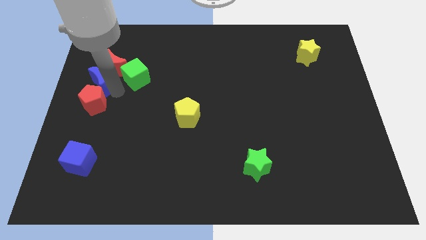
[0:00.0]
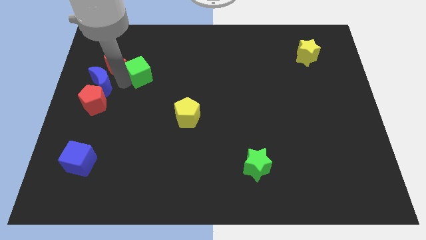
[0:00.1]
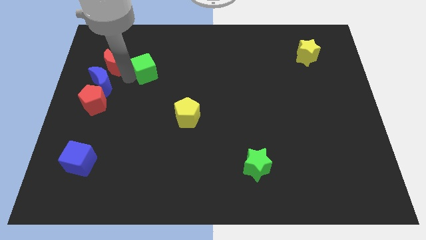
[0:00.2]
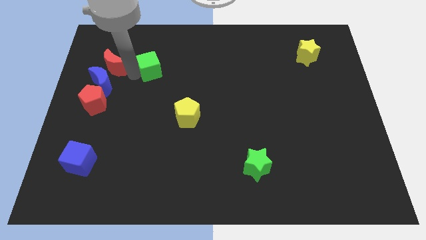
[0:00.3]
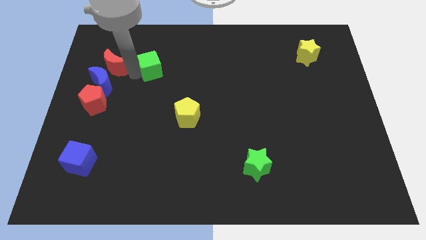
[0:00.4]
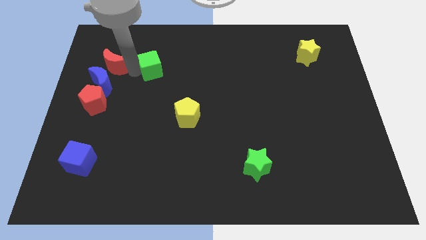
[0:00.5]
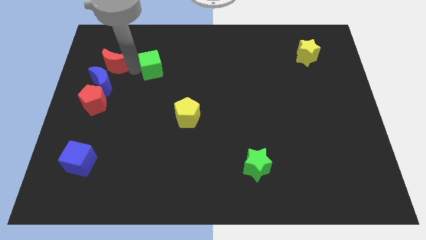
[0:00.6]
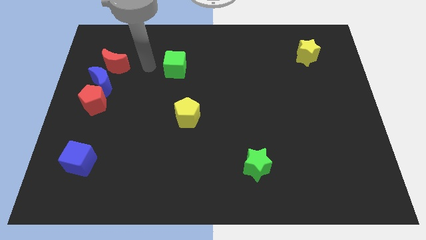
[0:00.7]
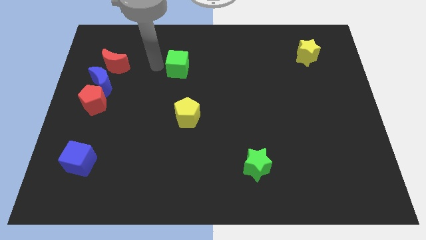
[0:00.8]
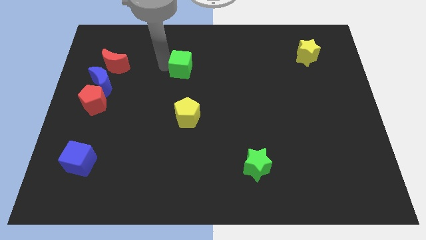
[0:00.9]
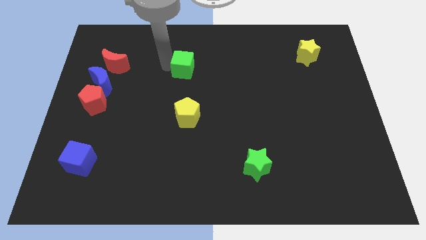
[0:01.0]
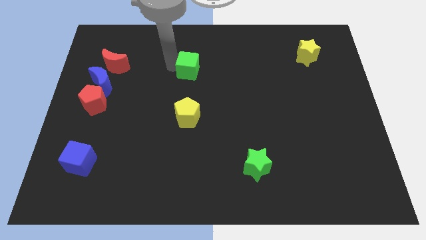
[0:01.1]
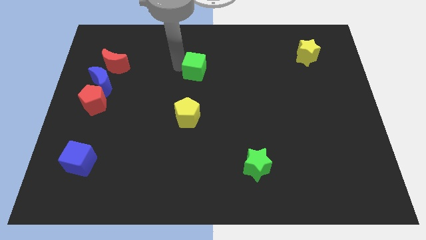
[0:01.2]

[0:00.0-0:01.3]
push the green cube to the top side of the yellow pentagon

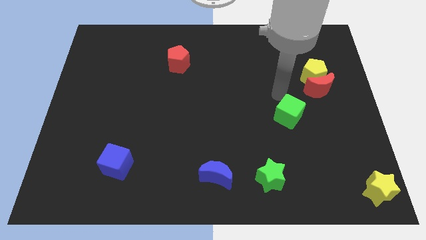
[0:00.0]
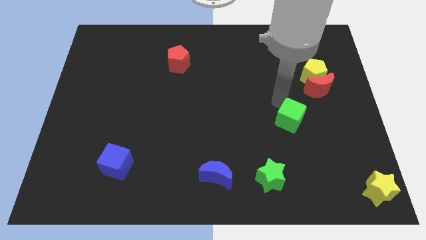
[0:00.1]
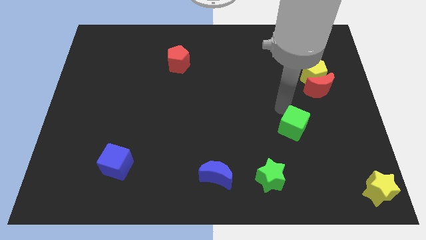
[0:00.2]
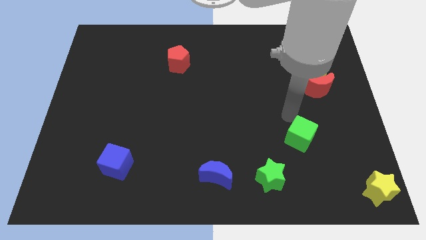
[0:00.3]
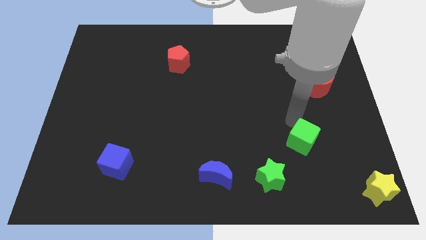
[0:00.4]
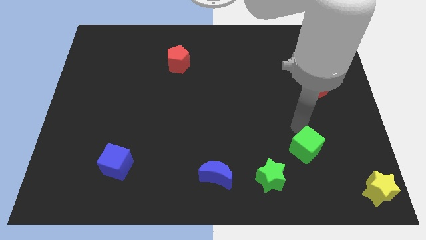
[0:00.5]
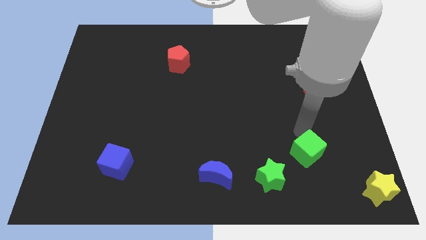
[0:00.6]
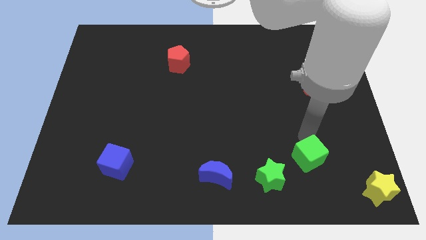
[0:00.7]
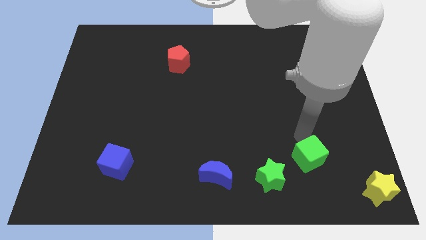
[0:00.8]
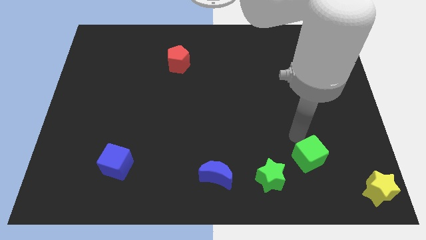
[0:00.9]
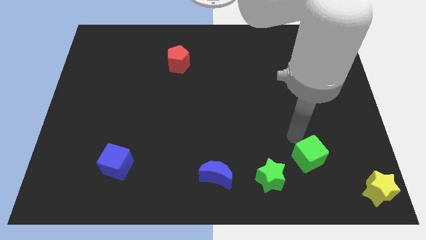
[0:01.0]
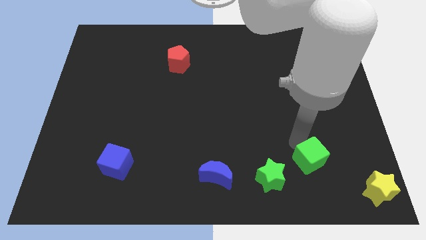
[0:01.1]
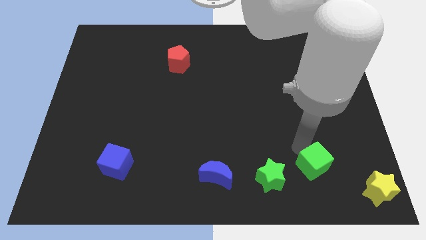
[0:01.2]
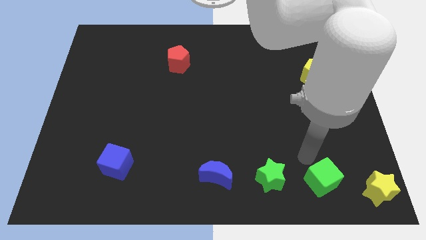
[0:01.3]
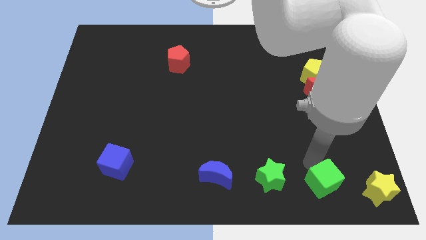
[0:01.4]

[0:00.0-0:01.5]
push the green cube to the right of the green star

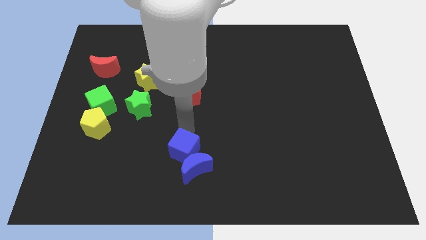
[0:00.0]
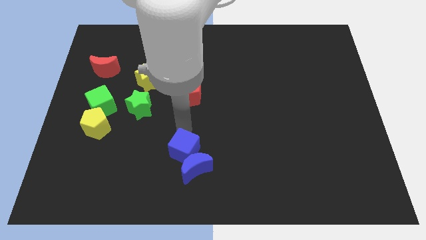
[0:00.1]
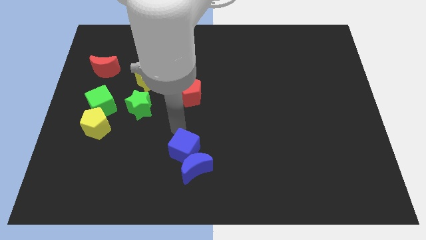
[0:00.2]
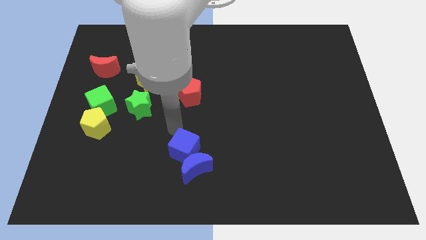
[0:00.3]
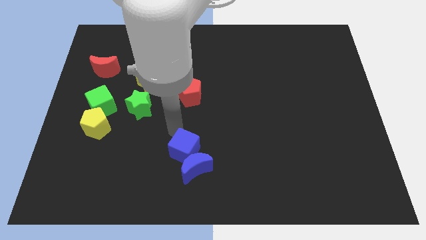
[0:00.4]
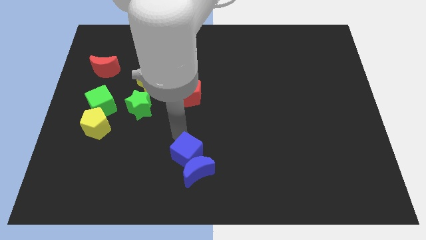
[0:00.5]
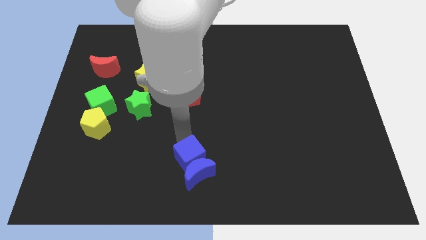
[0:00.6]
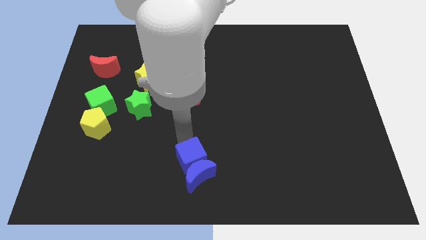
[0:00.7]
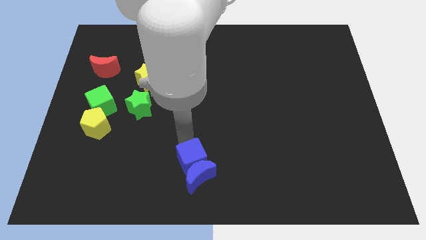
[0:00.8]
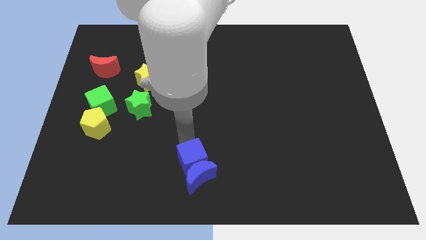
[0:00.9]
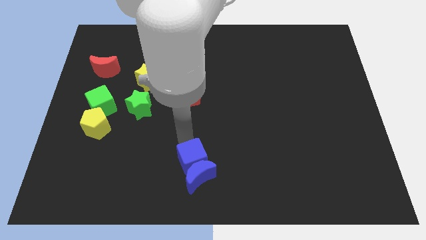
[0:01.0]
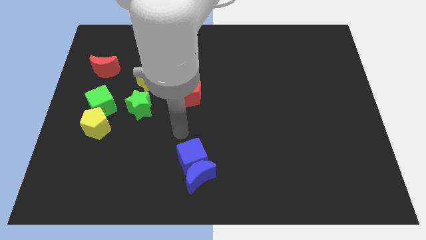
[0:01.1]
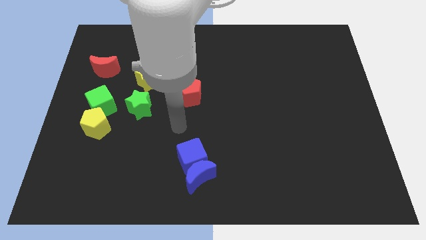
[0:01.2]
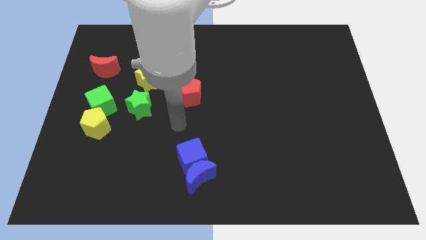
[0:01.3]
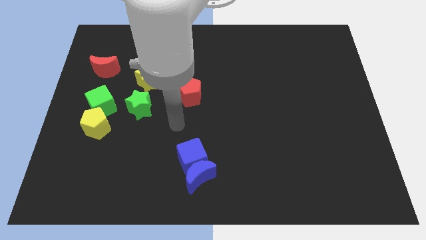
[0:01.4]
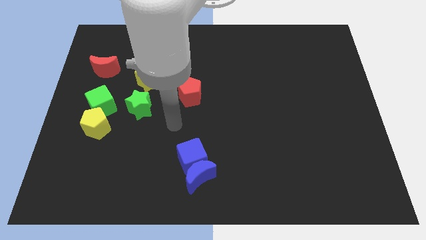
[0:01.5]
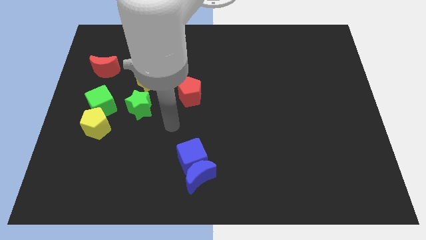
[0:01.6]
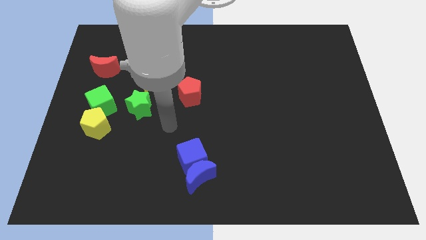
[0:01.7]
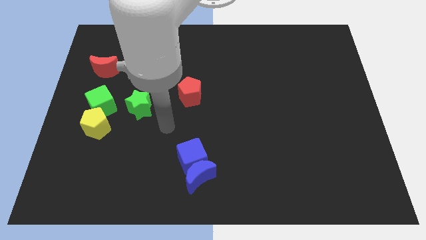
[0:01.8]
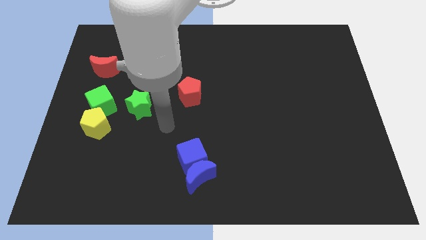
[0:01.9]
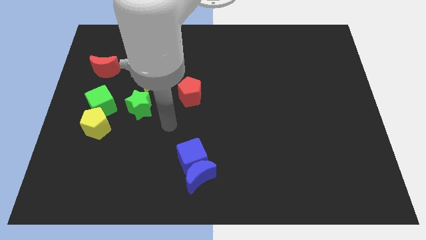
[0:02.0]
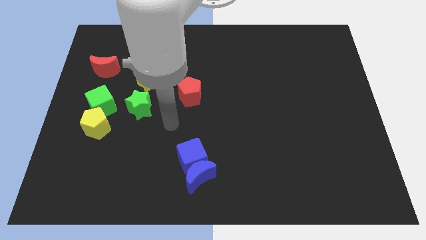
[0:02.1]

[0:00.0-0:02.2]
push the blue moon slightly with bluw cube

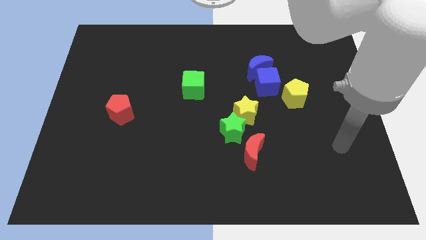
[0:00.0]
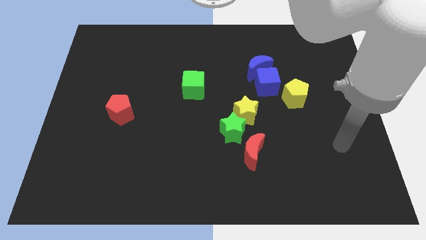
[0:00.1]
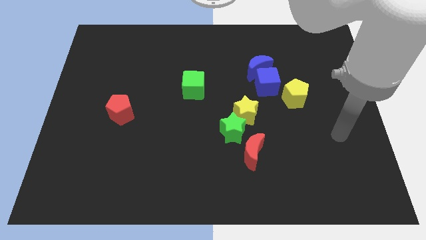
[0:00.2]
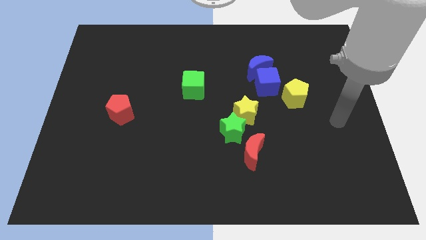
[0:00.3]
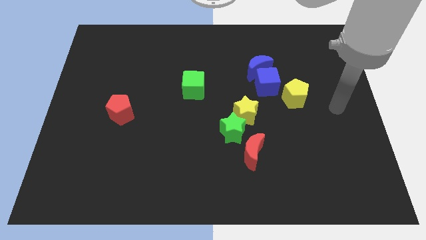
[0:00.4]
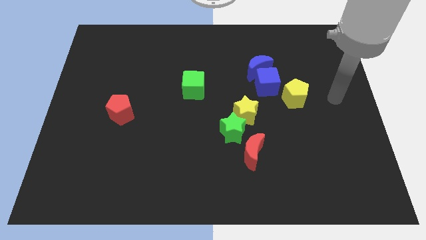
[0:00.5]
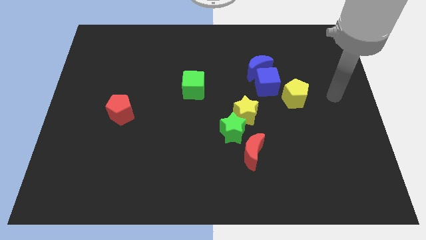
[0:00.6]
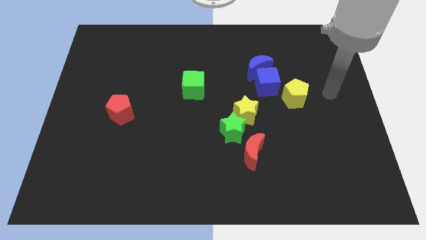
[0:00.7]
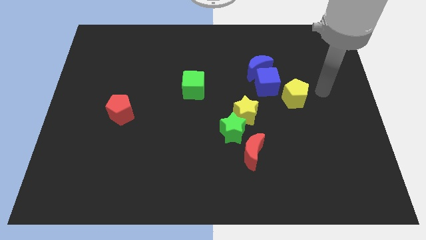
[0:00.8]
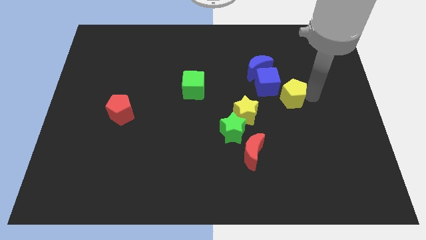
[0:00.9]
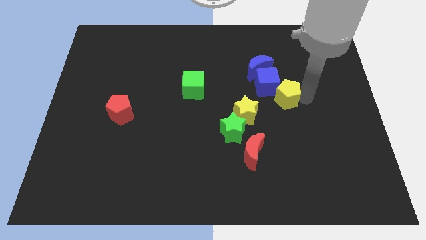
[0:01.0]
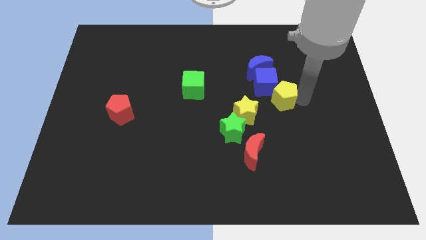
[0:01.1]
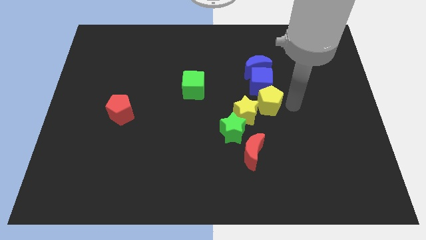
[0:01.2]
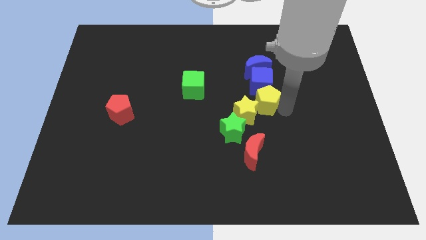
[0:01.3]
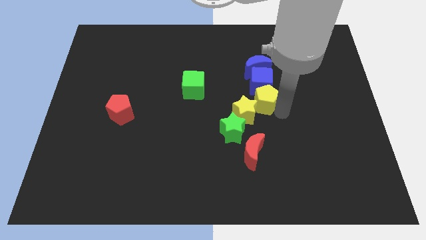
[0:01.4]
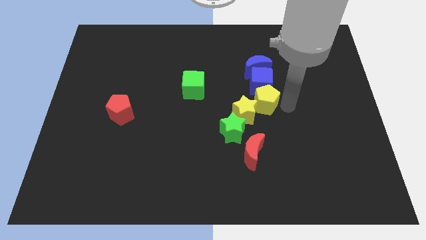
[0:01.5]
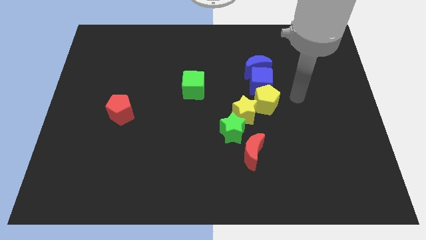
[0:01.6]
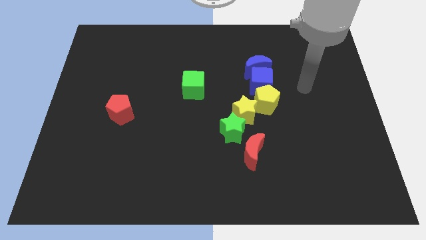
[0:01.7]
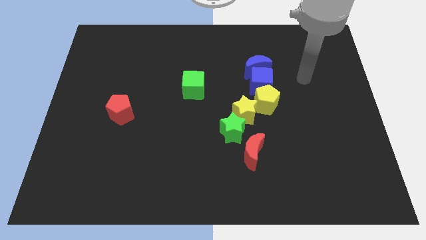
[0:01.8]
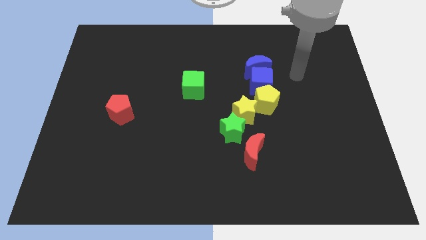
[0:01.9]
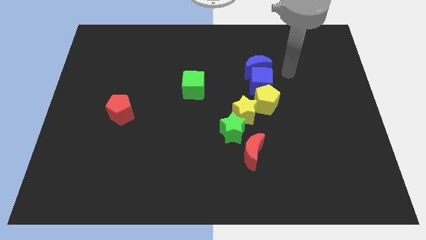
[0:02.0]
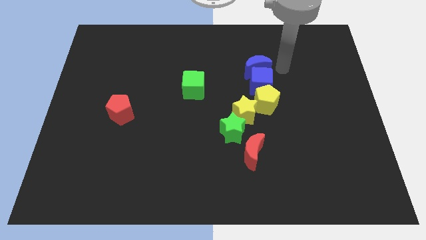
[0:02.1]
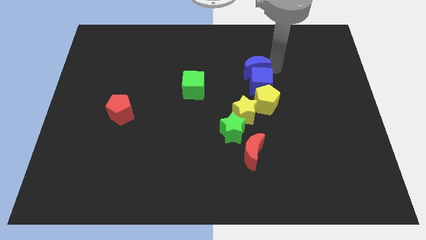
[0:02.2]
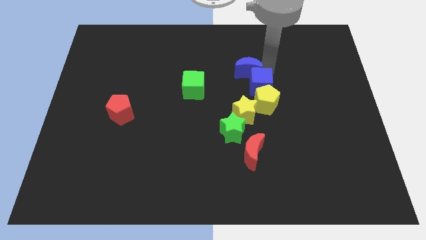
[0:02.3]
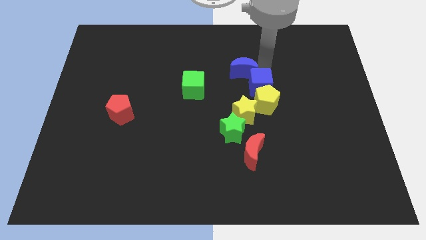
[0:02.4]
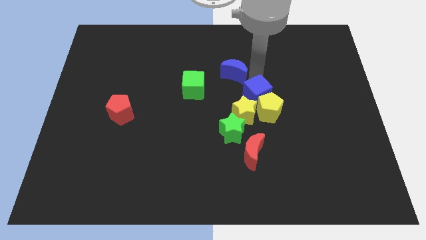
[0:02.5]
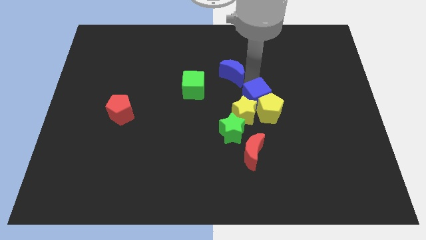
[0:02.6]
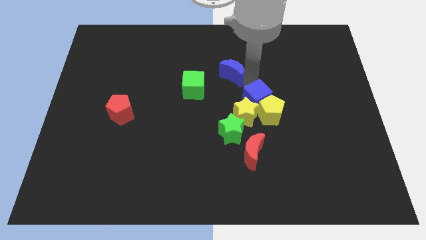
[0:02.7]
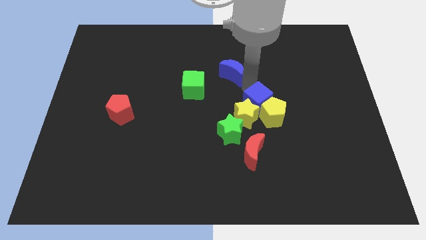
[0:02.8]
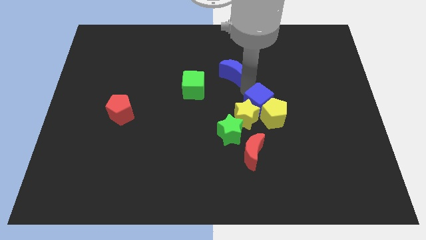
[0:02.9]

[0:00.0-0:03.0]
move blue blocksand yellow blocks slightly downwards

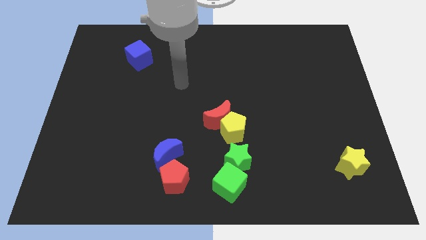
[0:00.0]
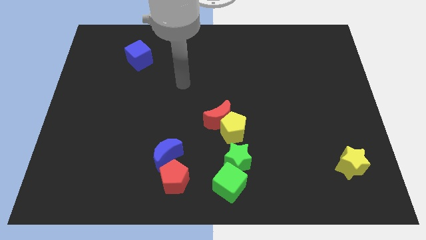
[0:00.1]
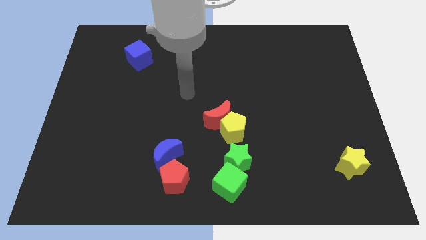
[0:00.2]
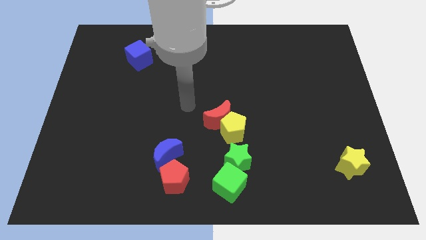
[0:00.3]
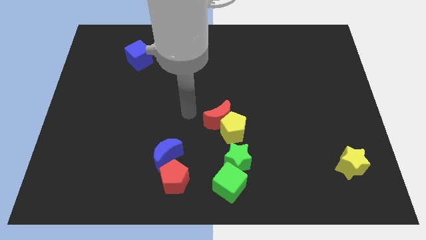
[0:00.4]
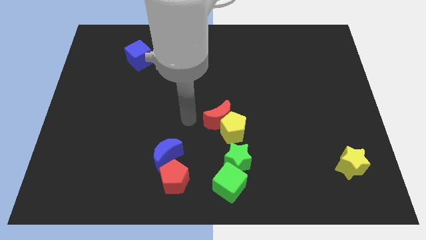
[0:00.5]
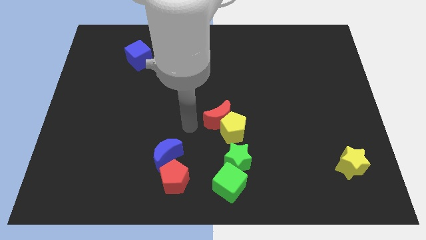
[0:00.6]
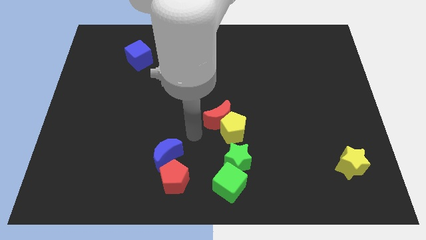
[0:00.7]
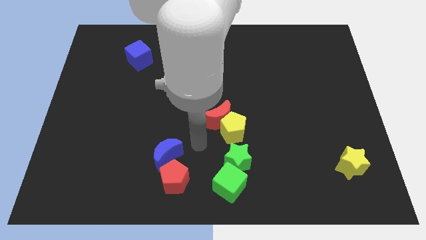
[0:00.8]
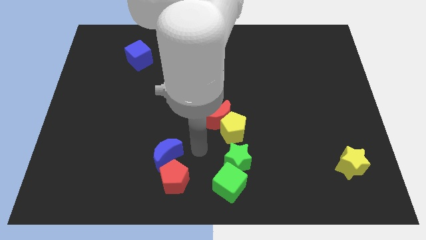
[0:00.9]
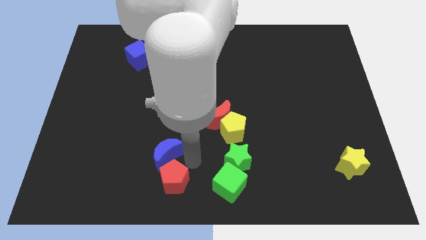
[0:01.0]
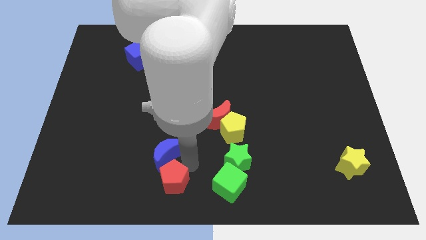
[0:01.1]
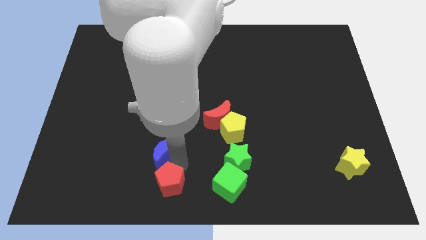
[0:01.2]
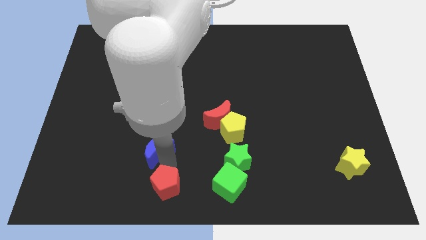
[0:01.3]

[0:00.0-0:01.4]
slightly push the red pentagon towards bottom left
